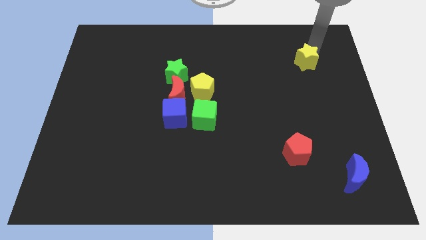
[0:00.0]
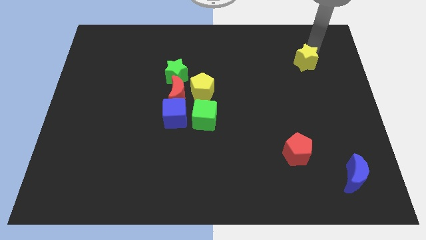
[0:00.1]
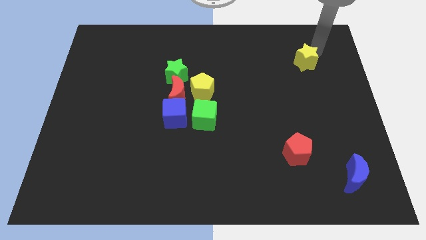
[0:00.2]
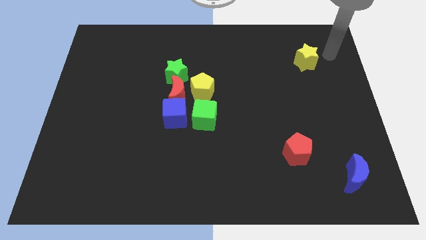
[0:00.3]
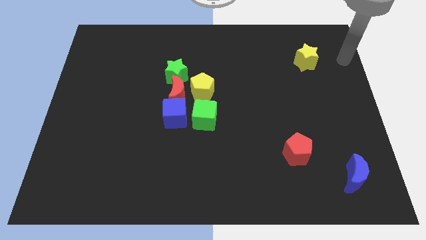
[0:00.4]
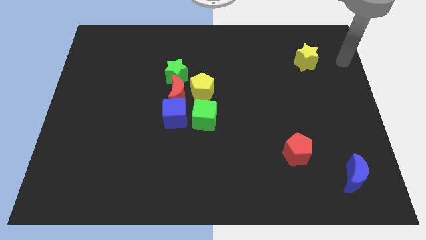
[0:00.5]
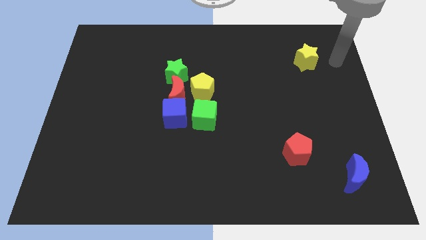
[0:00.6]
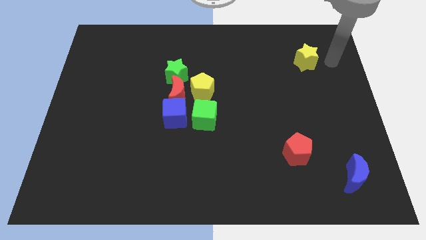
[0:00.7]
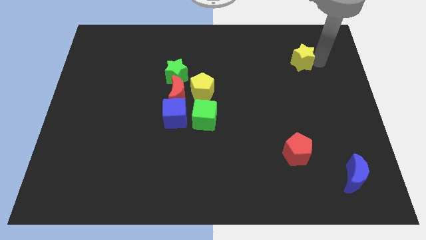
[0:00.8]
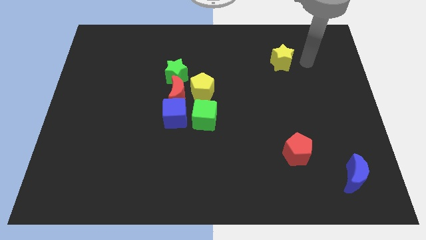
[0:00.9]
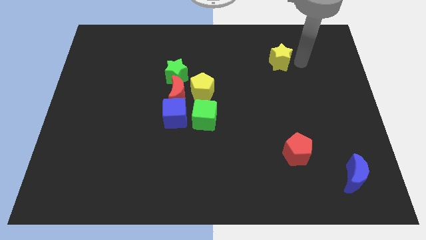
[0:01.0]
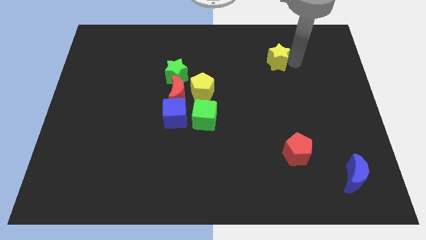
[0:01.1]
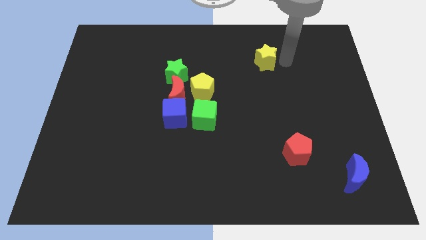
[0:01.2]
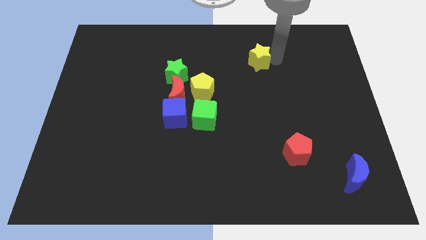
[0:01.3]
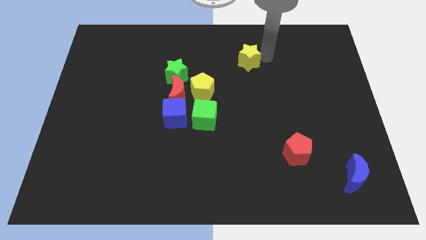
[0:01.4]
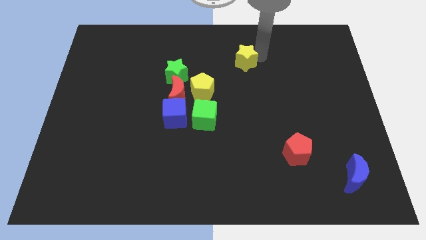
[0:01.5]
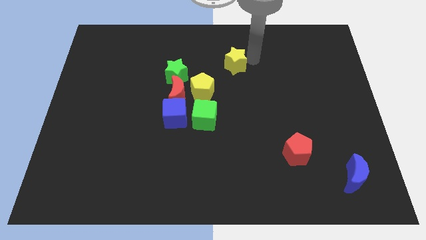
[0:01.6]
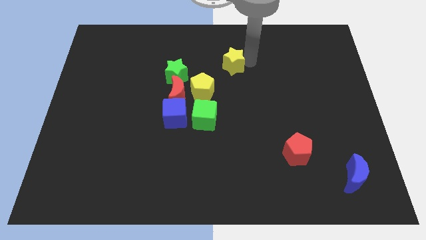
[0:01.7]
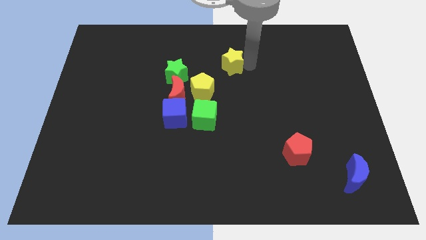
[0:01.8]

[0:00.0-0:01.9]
move the yellow star towards the left side

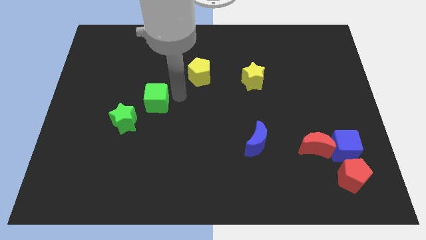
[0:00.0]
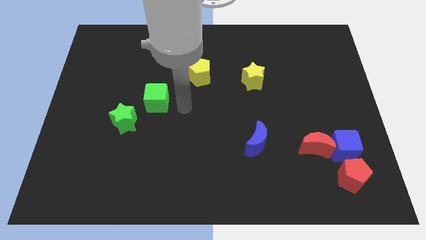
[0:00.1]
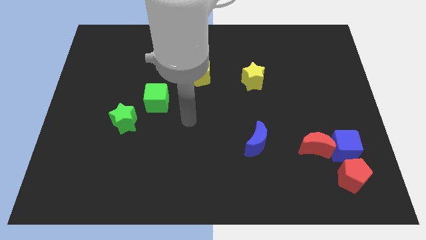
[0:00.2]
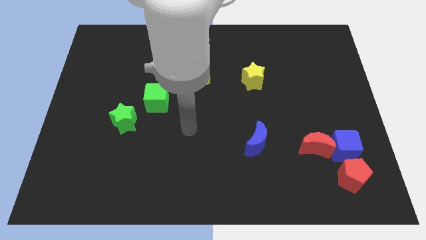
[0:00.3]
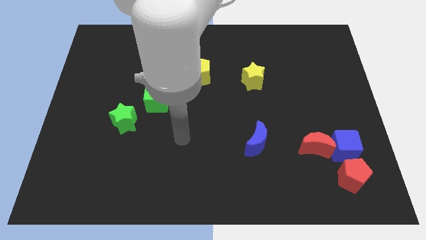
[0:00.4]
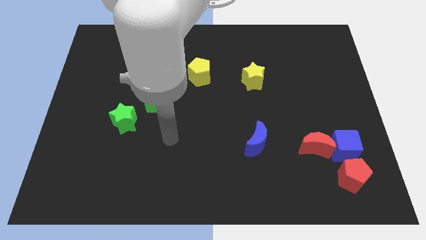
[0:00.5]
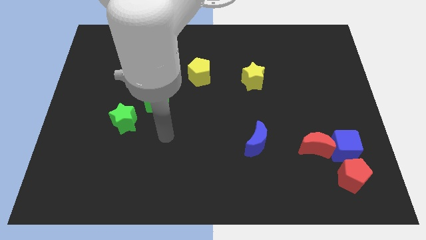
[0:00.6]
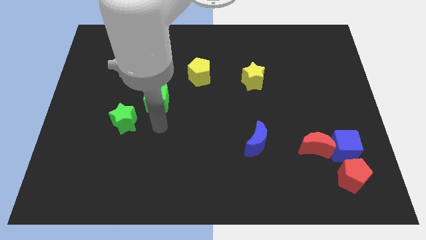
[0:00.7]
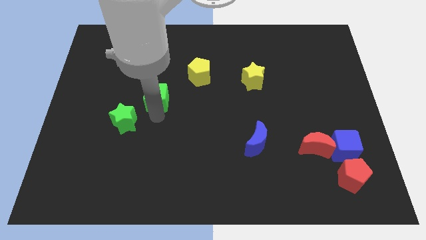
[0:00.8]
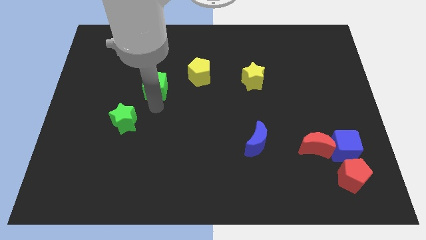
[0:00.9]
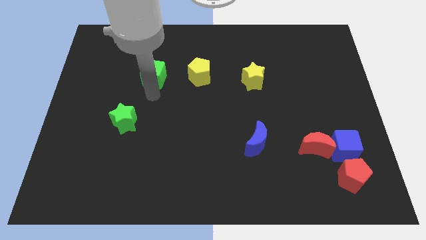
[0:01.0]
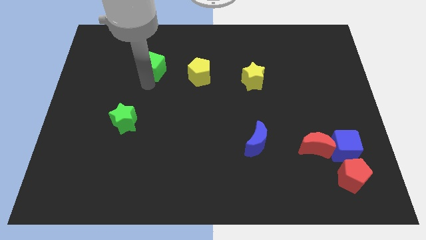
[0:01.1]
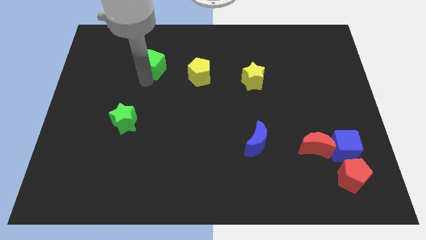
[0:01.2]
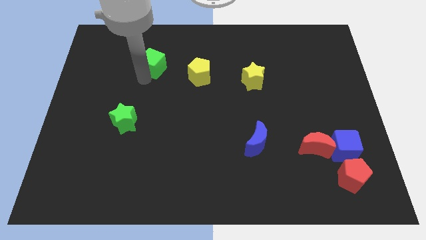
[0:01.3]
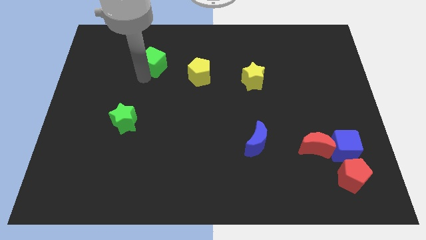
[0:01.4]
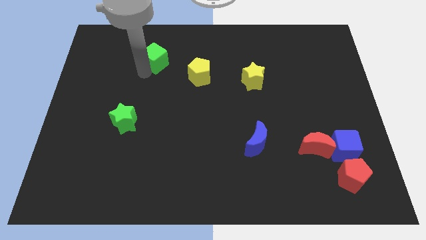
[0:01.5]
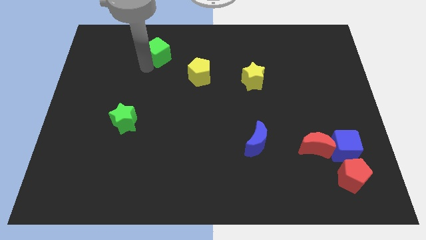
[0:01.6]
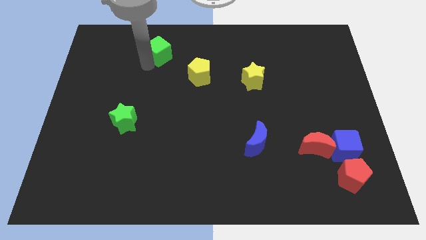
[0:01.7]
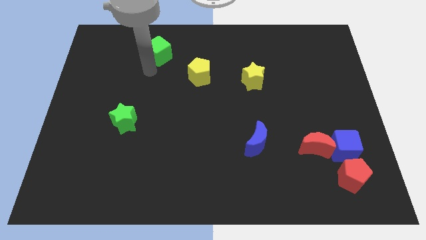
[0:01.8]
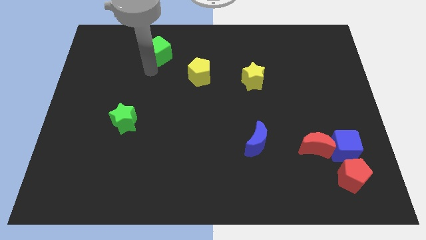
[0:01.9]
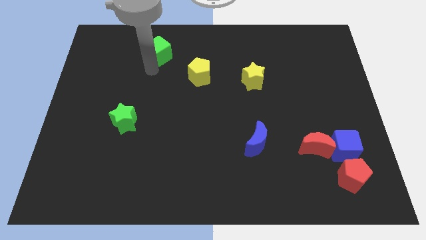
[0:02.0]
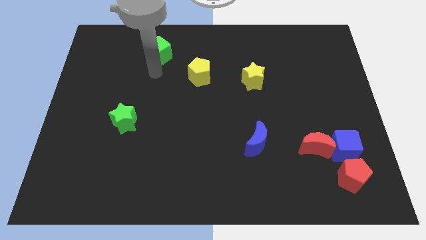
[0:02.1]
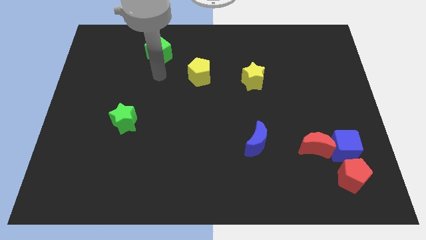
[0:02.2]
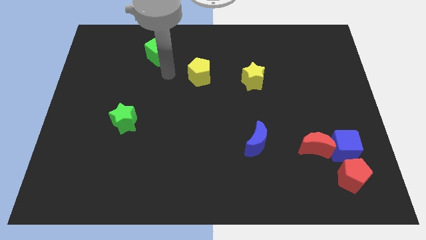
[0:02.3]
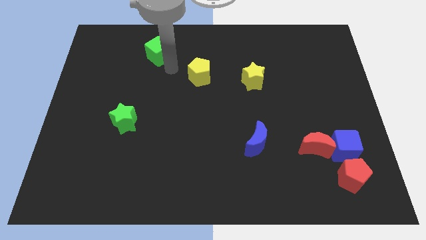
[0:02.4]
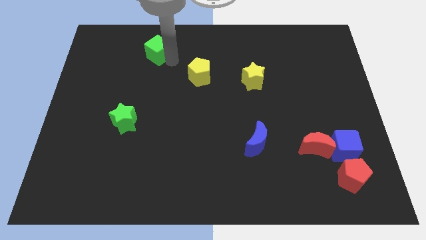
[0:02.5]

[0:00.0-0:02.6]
move the green cube diagonal to the yellow pentagon

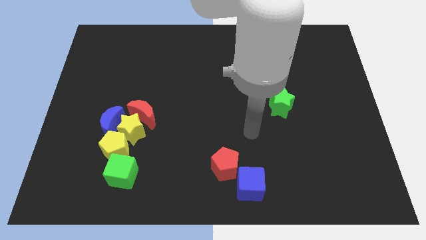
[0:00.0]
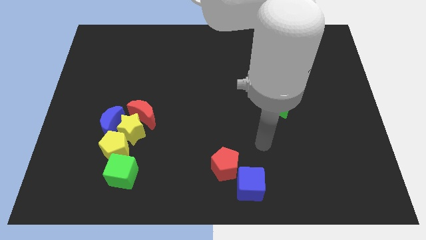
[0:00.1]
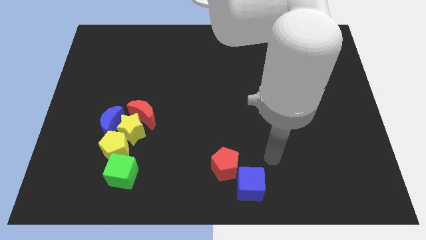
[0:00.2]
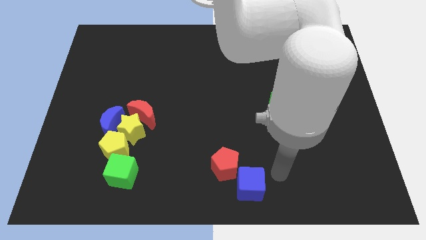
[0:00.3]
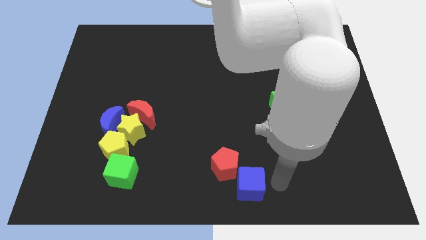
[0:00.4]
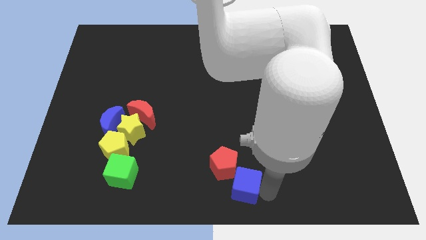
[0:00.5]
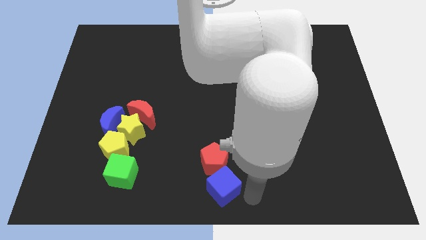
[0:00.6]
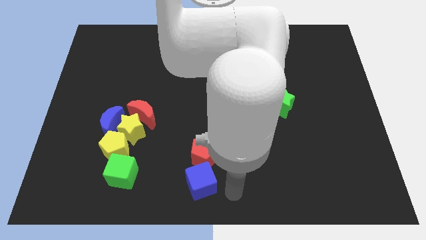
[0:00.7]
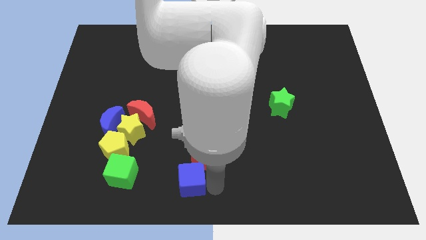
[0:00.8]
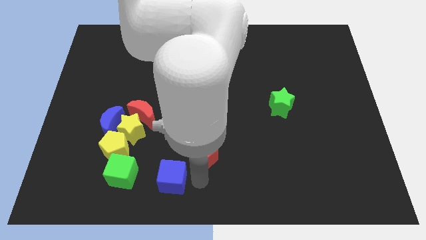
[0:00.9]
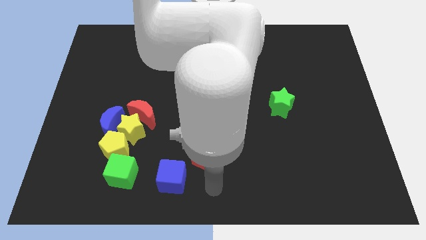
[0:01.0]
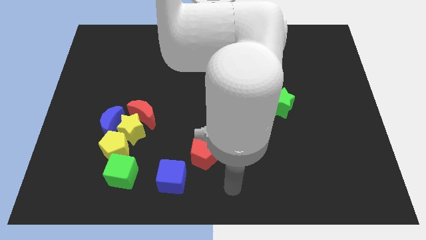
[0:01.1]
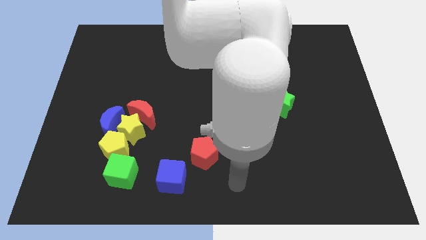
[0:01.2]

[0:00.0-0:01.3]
push the blue cube to the right of the green cube

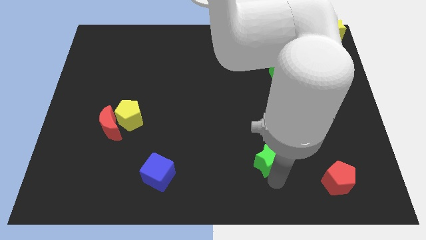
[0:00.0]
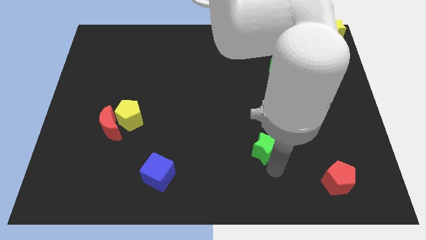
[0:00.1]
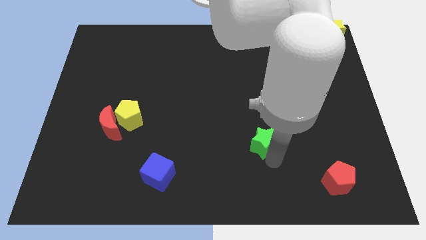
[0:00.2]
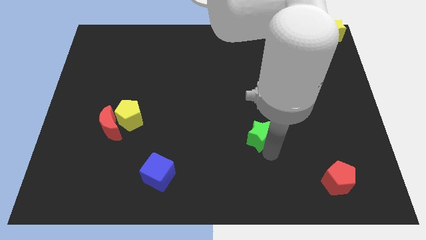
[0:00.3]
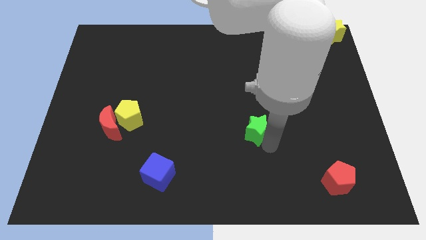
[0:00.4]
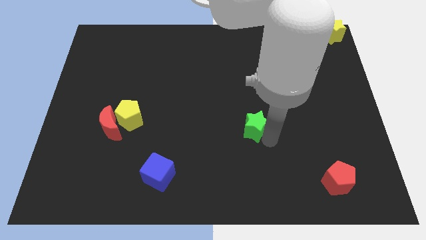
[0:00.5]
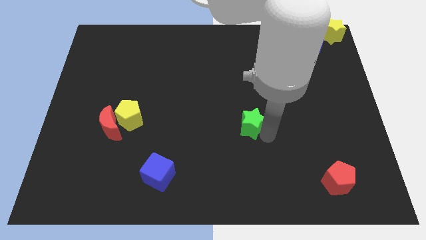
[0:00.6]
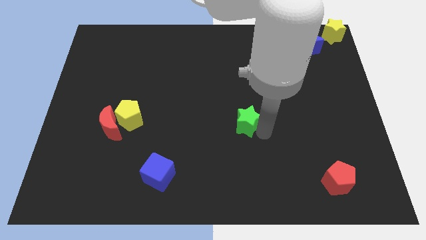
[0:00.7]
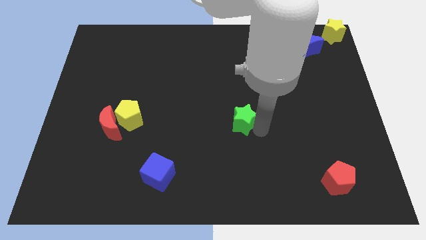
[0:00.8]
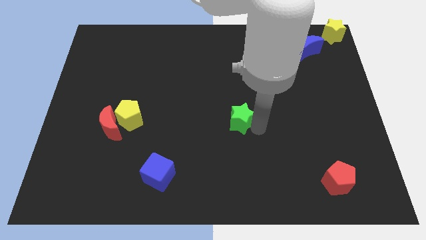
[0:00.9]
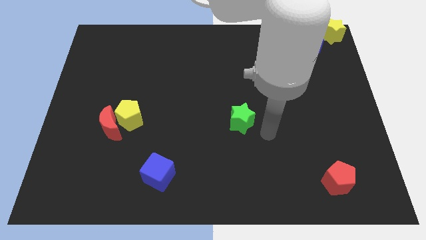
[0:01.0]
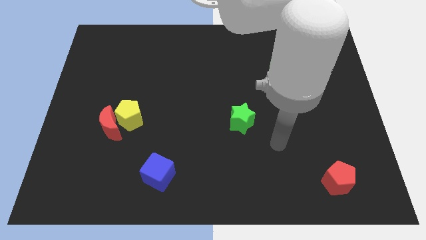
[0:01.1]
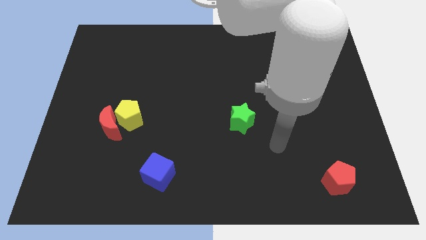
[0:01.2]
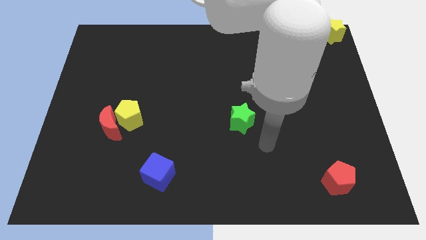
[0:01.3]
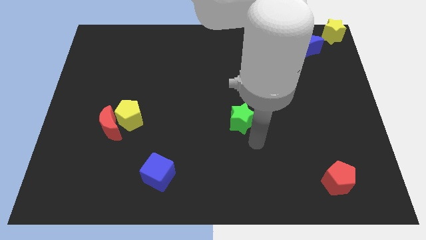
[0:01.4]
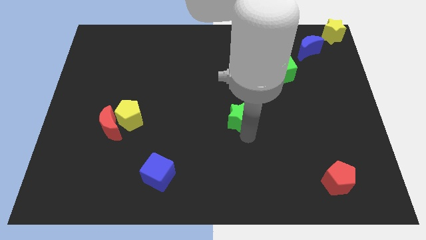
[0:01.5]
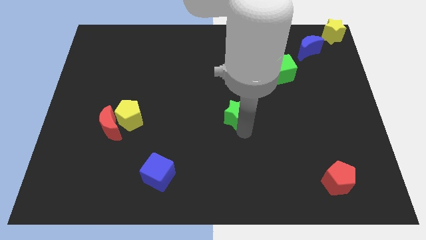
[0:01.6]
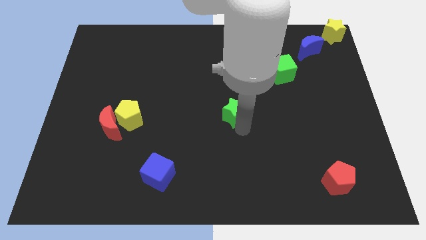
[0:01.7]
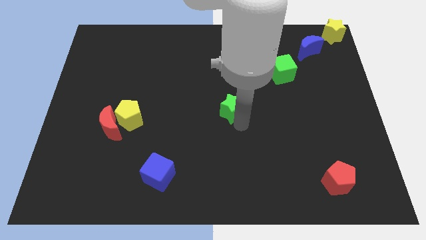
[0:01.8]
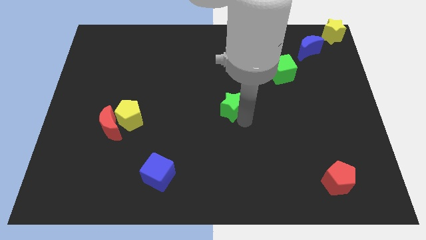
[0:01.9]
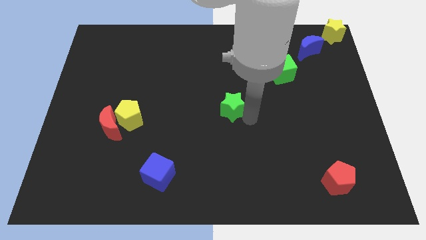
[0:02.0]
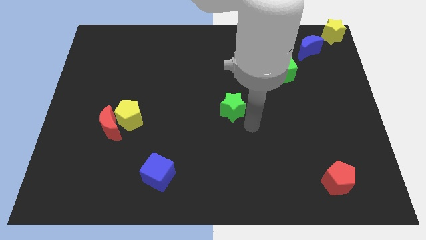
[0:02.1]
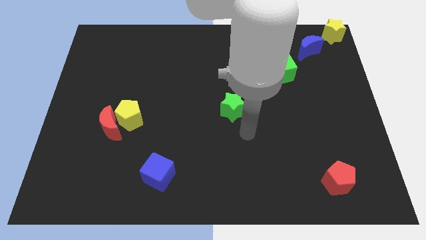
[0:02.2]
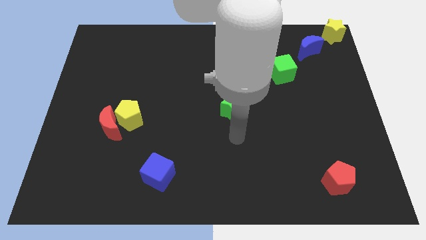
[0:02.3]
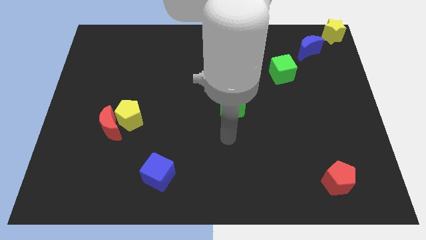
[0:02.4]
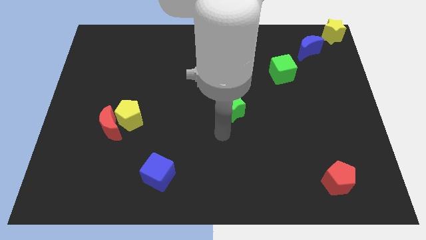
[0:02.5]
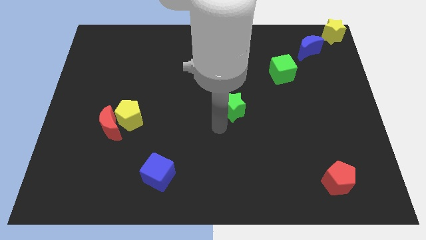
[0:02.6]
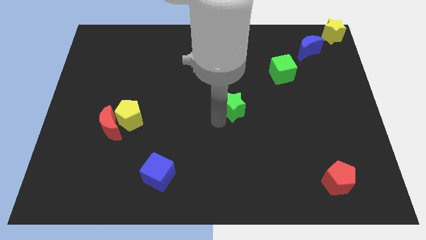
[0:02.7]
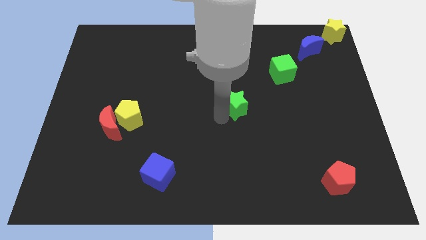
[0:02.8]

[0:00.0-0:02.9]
move the green star to the center of the board

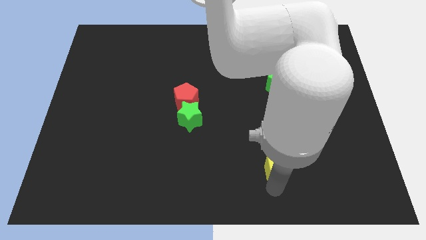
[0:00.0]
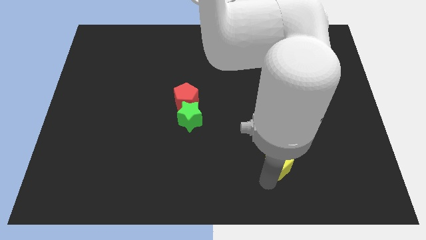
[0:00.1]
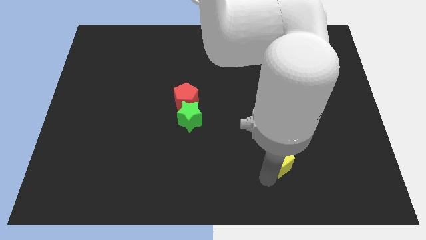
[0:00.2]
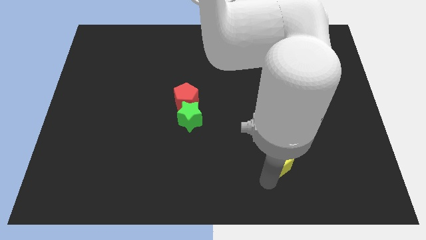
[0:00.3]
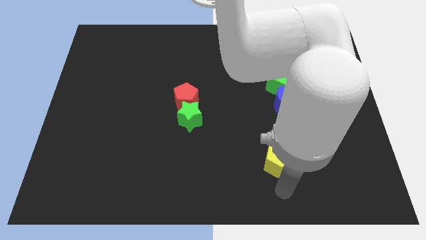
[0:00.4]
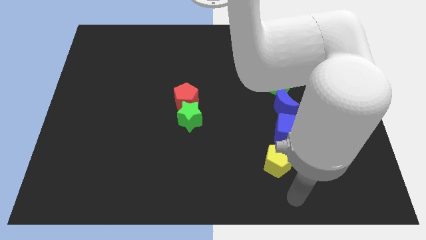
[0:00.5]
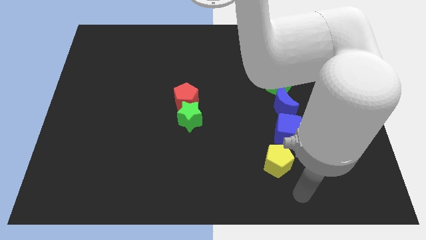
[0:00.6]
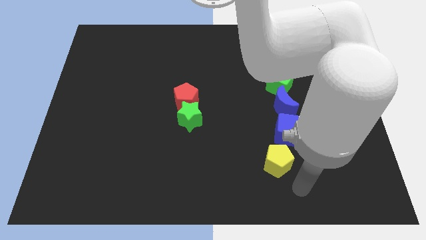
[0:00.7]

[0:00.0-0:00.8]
place the yellow pentagon below the blue cube
